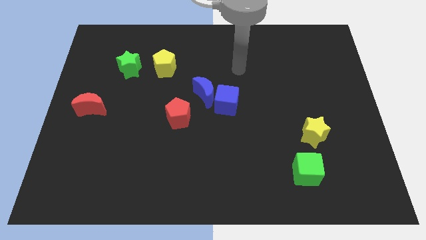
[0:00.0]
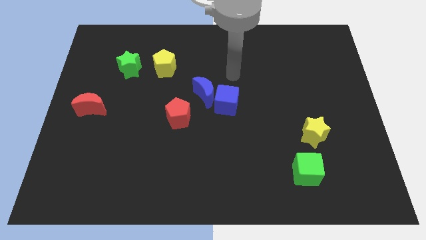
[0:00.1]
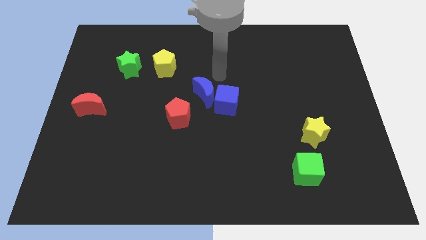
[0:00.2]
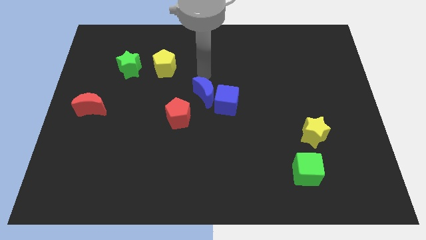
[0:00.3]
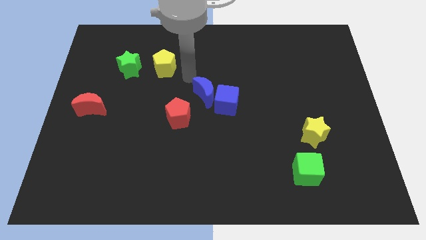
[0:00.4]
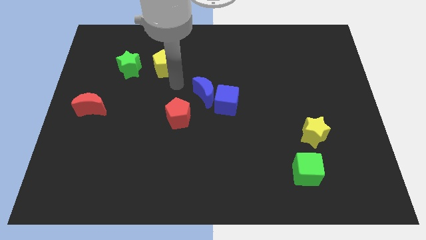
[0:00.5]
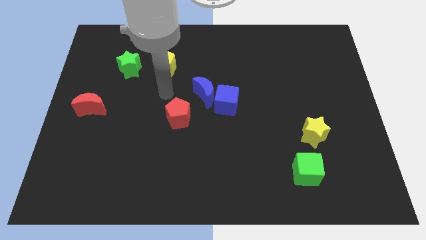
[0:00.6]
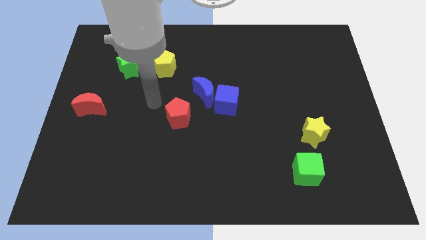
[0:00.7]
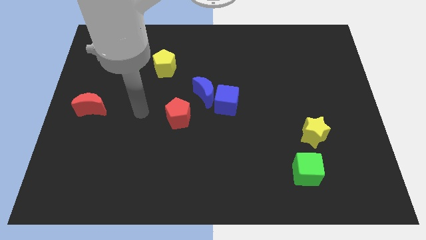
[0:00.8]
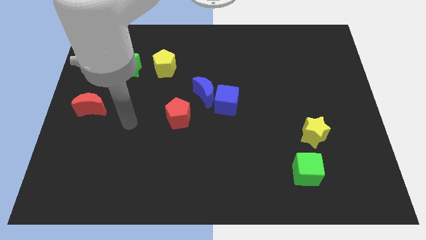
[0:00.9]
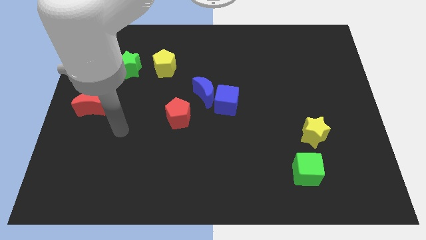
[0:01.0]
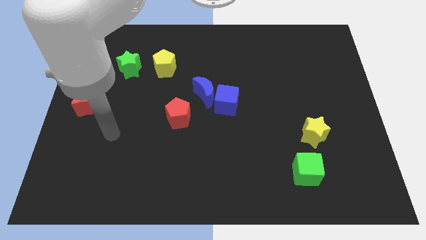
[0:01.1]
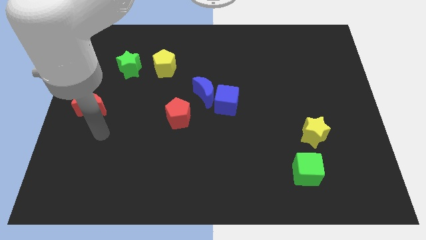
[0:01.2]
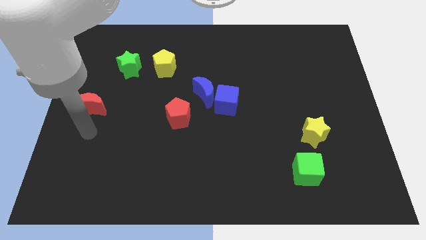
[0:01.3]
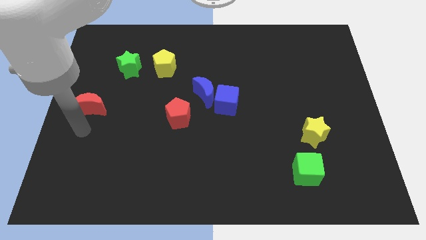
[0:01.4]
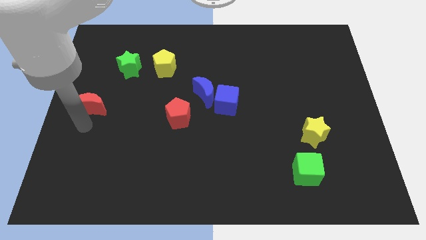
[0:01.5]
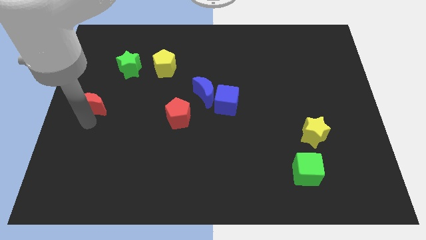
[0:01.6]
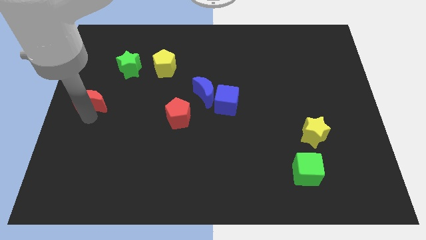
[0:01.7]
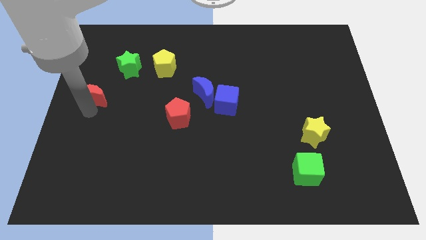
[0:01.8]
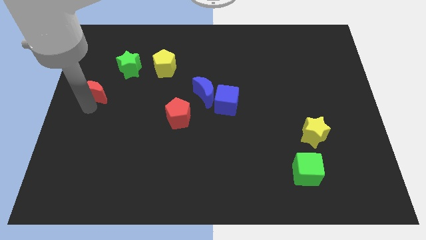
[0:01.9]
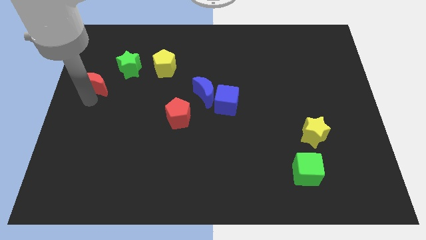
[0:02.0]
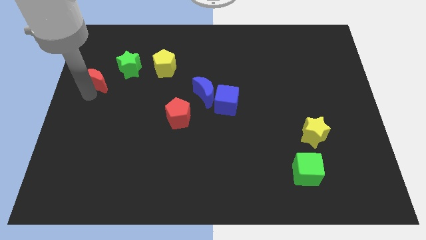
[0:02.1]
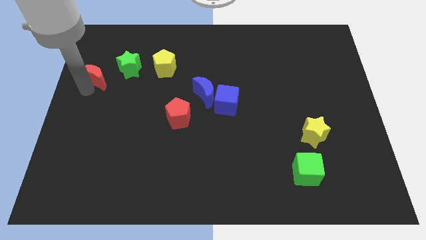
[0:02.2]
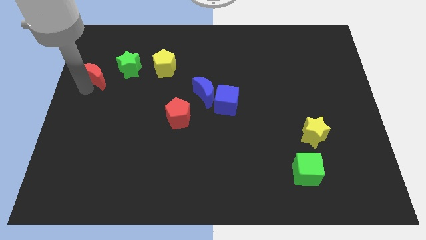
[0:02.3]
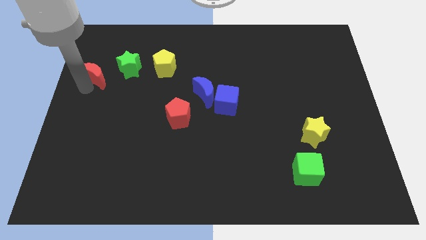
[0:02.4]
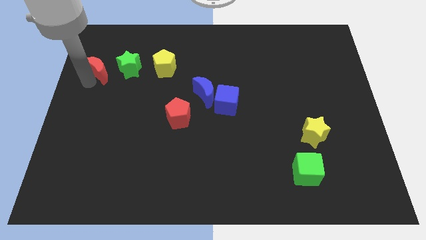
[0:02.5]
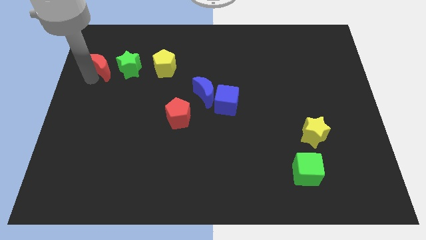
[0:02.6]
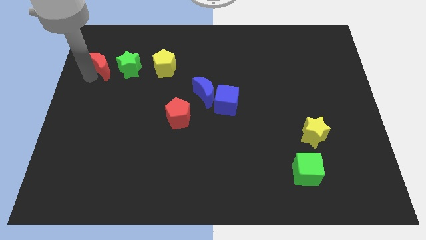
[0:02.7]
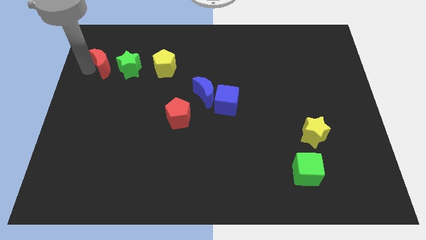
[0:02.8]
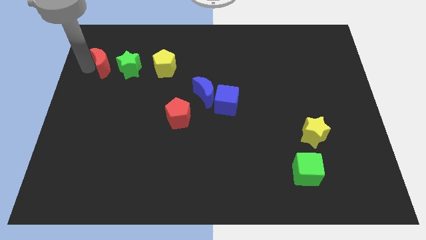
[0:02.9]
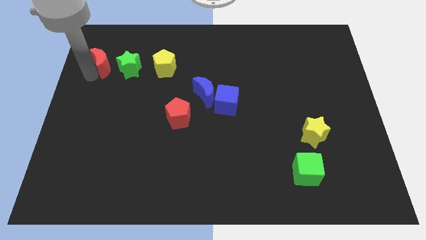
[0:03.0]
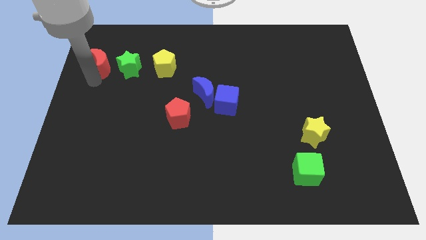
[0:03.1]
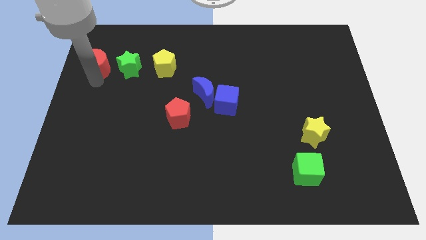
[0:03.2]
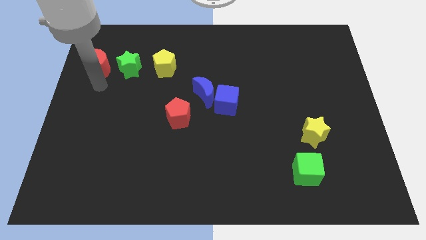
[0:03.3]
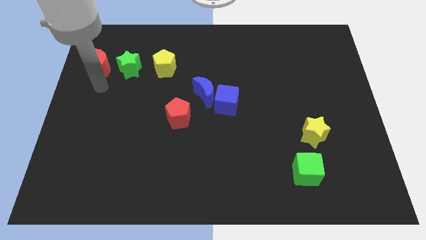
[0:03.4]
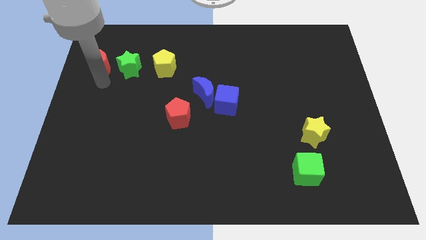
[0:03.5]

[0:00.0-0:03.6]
push the red crescent to the left of the green star

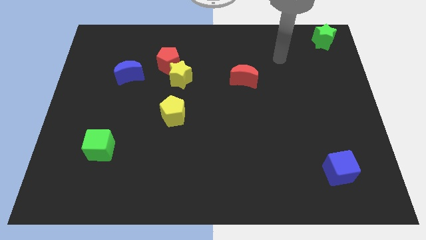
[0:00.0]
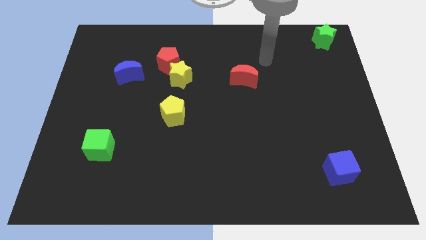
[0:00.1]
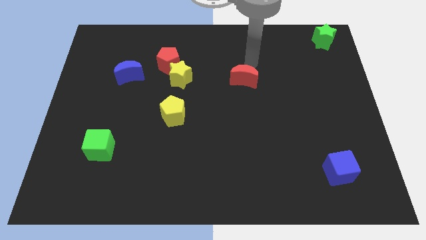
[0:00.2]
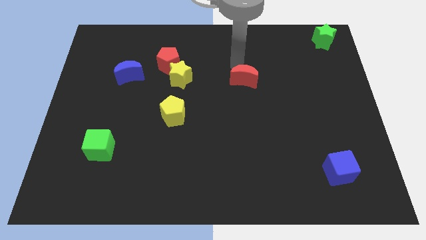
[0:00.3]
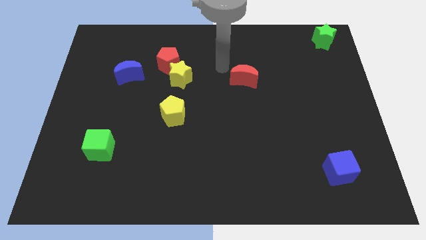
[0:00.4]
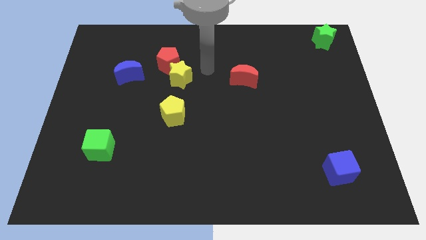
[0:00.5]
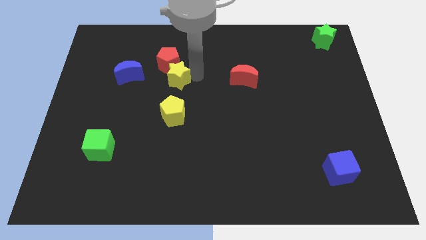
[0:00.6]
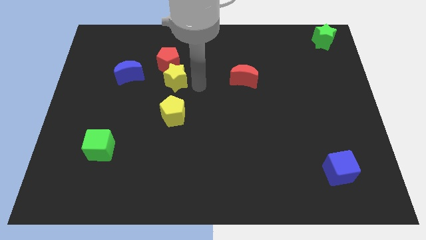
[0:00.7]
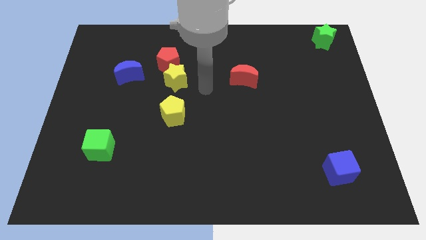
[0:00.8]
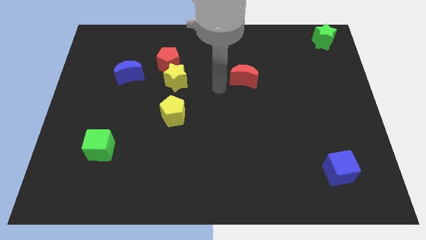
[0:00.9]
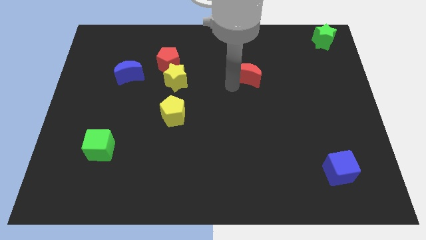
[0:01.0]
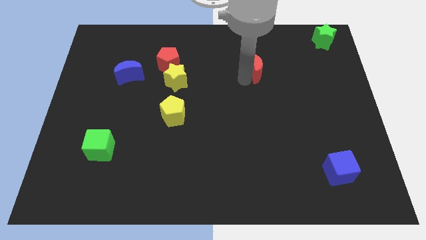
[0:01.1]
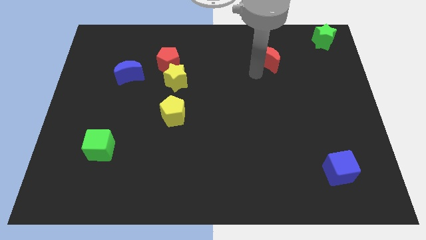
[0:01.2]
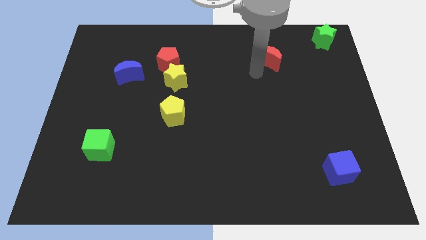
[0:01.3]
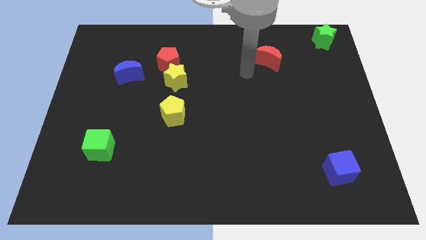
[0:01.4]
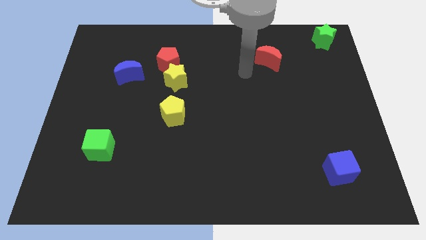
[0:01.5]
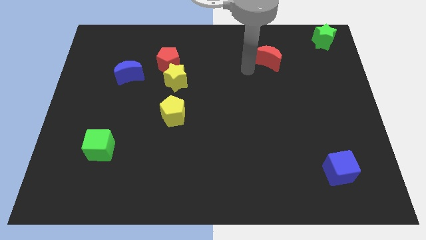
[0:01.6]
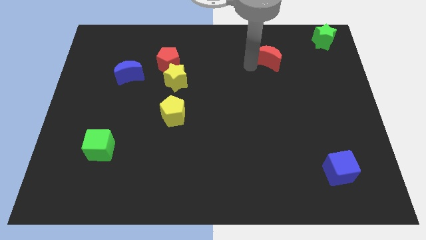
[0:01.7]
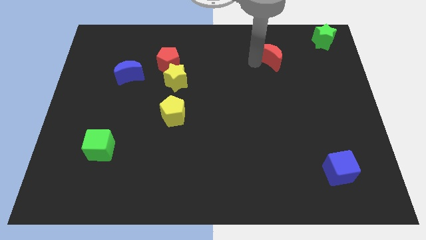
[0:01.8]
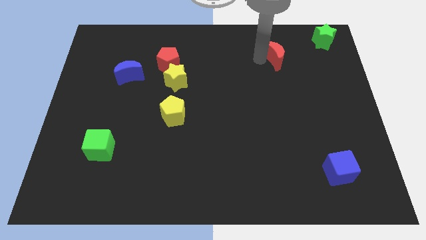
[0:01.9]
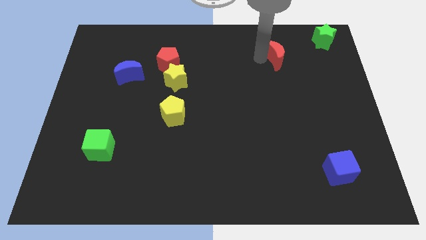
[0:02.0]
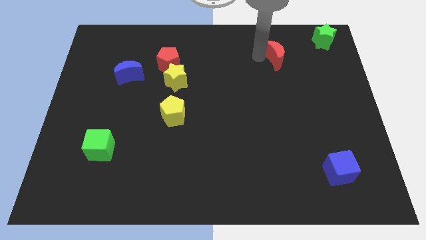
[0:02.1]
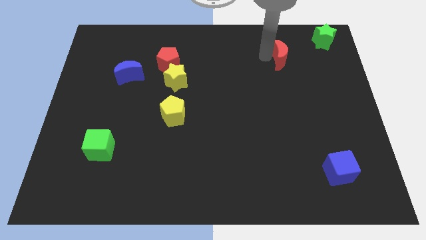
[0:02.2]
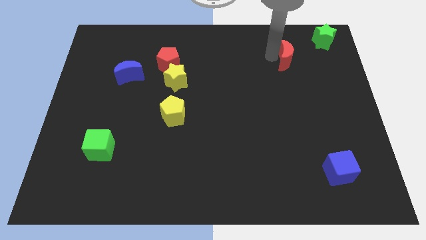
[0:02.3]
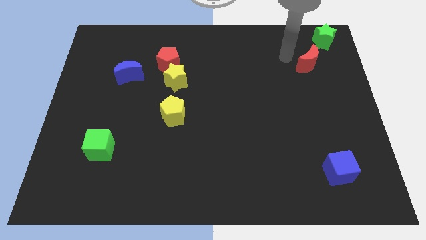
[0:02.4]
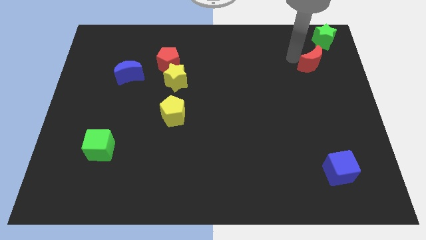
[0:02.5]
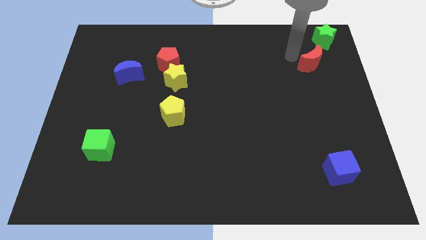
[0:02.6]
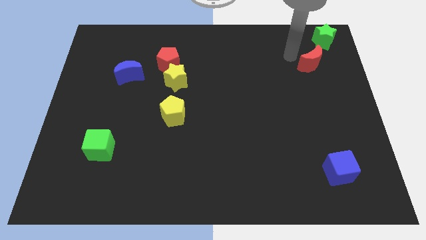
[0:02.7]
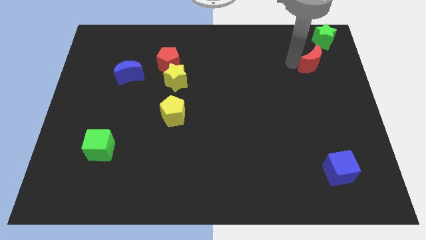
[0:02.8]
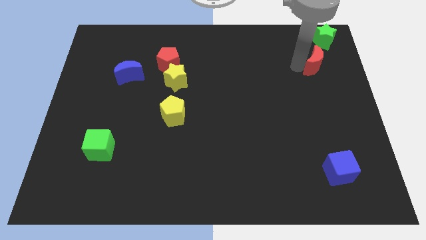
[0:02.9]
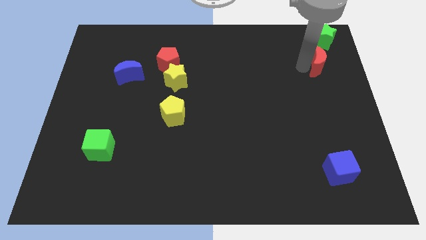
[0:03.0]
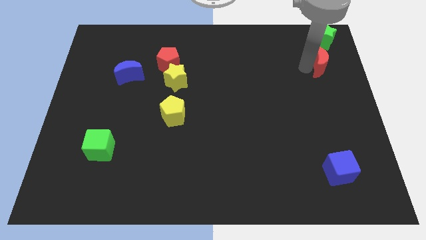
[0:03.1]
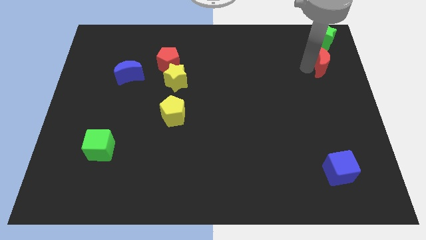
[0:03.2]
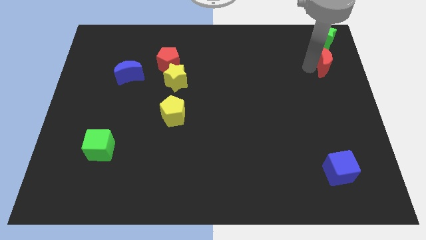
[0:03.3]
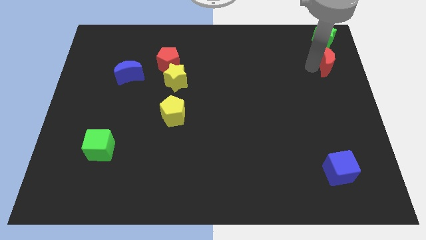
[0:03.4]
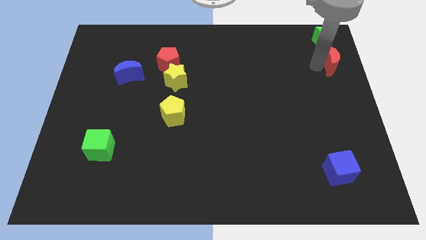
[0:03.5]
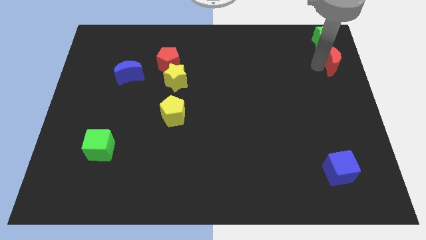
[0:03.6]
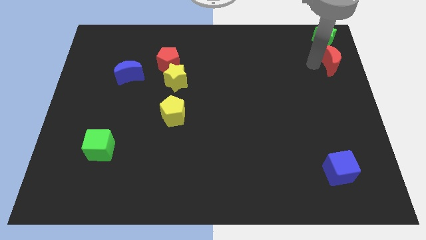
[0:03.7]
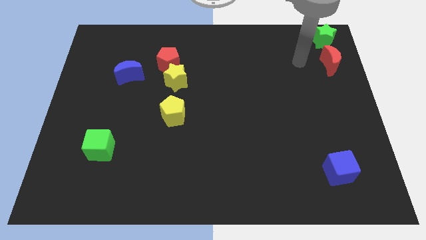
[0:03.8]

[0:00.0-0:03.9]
push the red crescent underneath the green star

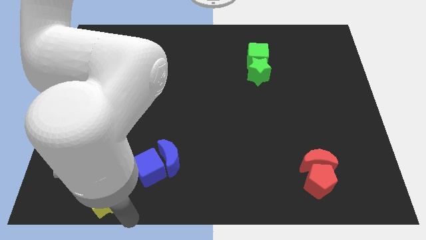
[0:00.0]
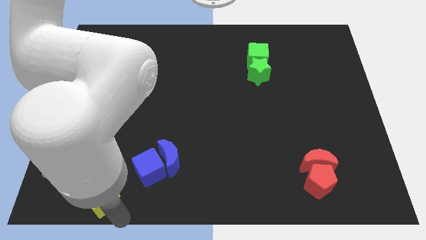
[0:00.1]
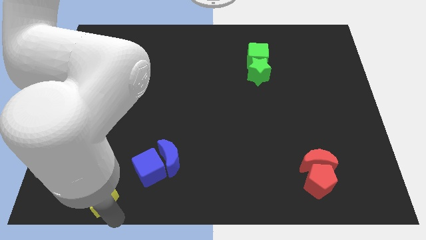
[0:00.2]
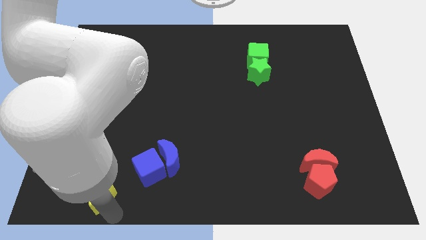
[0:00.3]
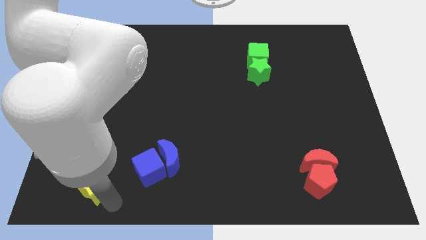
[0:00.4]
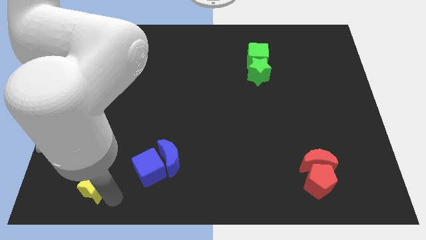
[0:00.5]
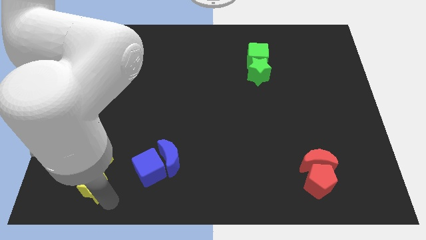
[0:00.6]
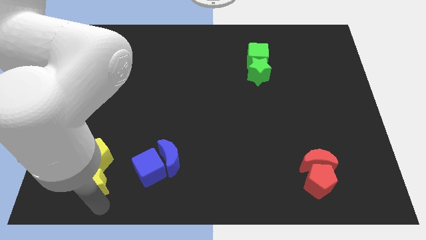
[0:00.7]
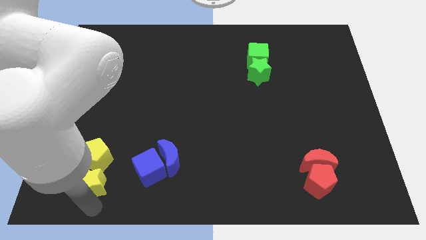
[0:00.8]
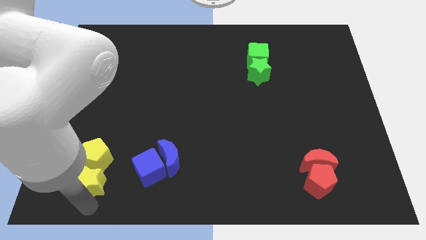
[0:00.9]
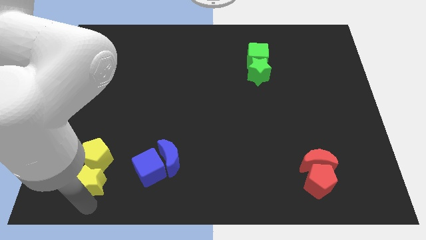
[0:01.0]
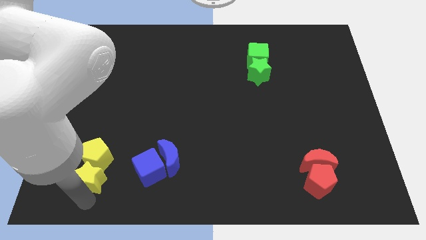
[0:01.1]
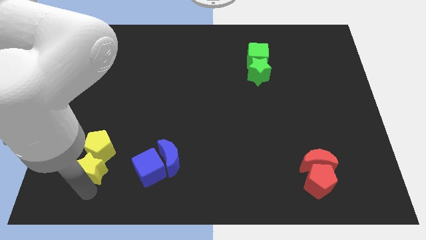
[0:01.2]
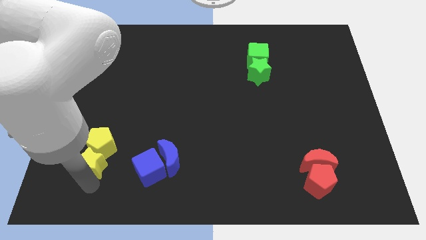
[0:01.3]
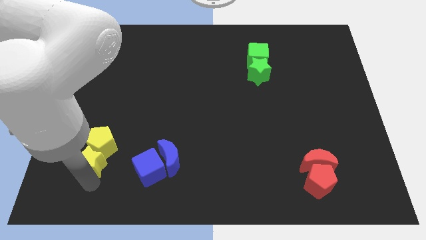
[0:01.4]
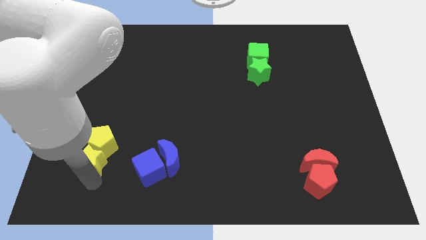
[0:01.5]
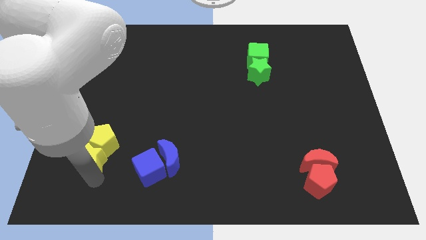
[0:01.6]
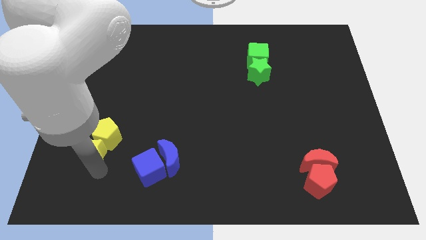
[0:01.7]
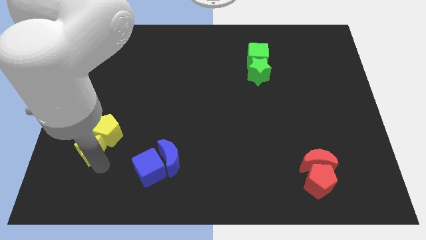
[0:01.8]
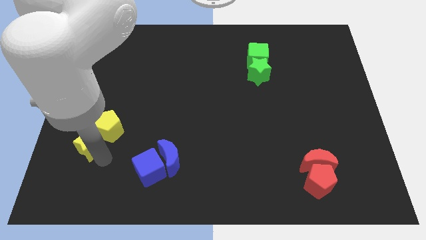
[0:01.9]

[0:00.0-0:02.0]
move the yellow star with yellow pentagon to the center left
